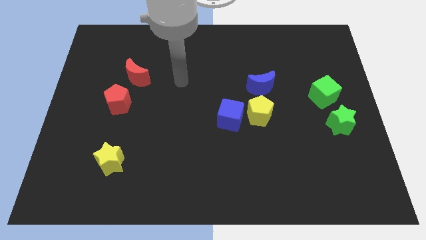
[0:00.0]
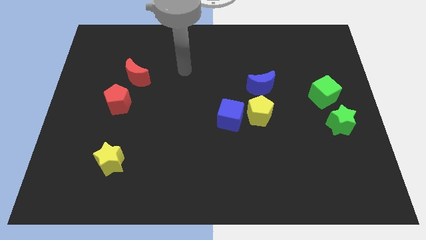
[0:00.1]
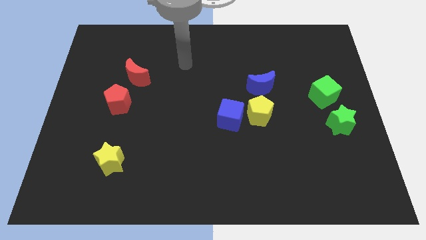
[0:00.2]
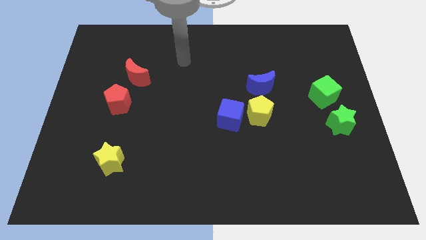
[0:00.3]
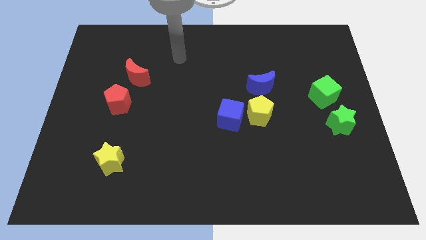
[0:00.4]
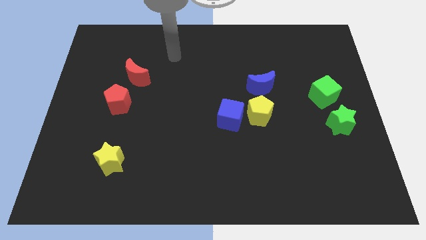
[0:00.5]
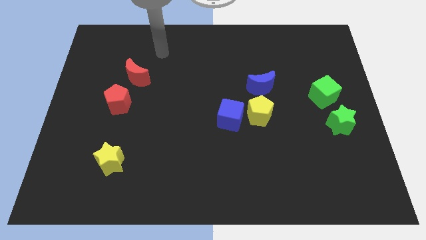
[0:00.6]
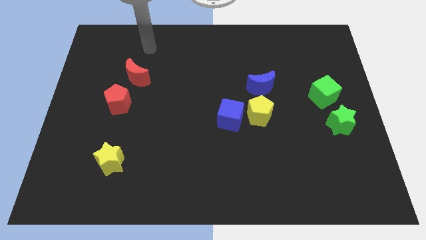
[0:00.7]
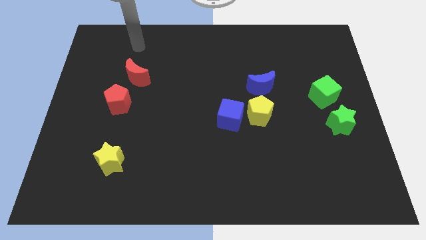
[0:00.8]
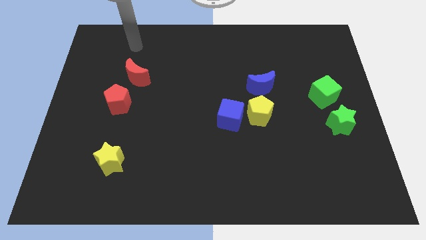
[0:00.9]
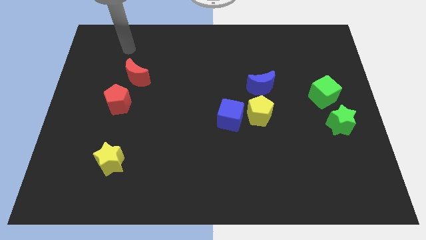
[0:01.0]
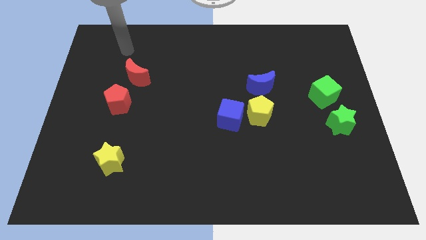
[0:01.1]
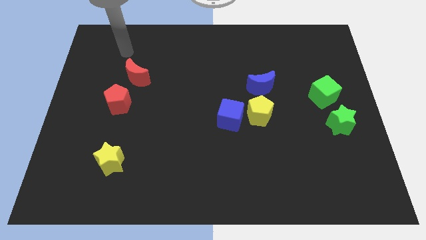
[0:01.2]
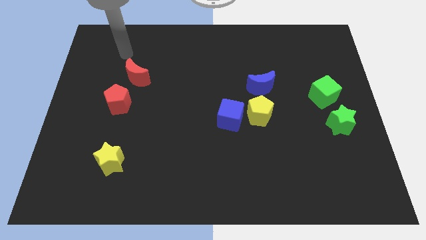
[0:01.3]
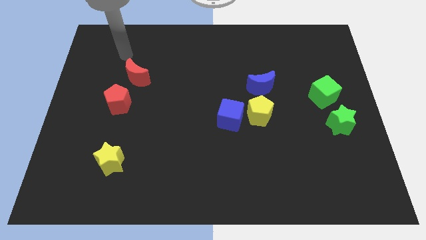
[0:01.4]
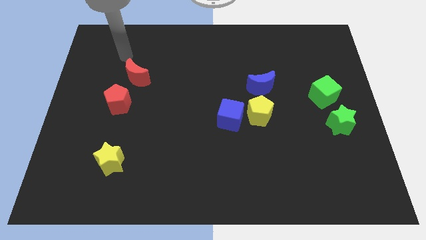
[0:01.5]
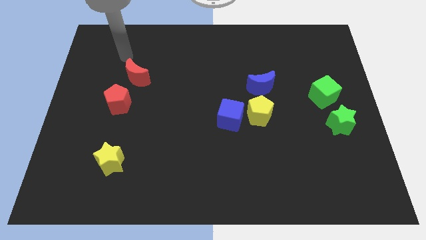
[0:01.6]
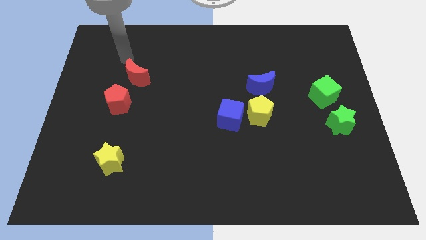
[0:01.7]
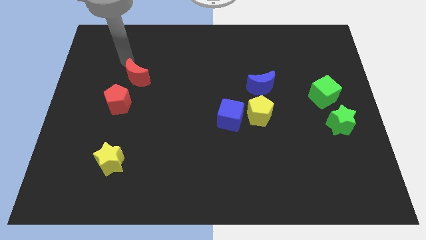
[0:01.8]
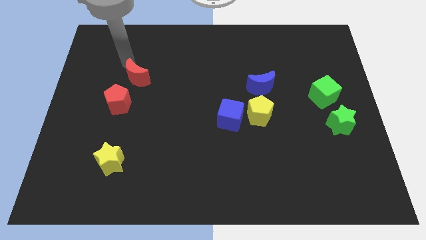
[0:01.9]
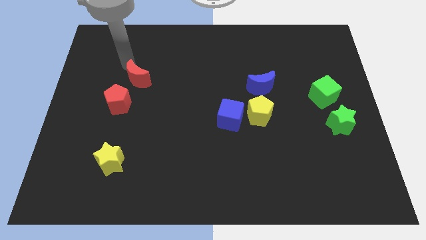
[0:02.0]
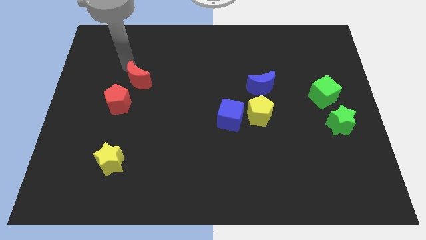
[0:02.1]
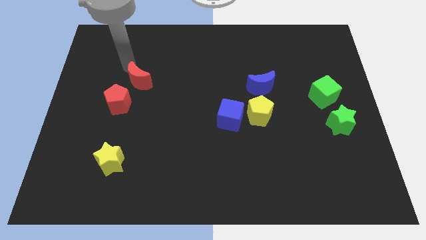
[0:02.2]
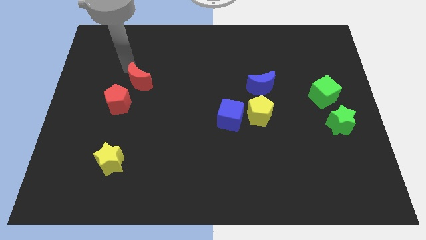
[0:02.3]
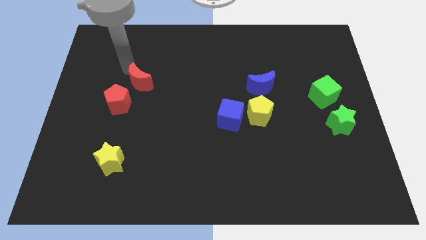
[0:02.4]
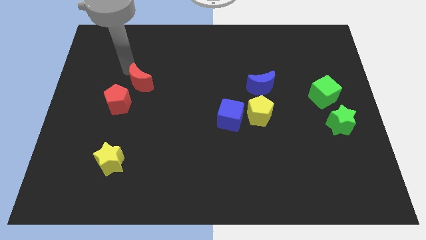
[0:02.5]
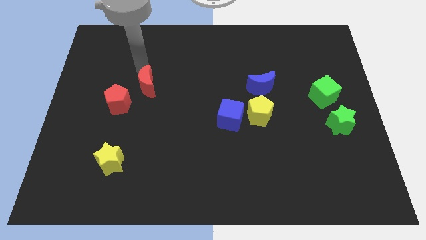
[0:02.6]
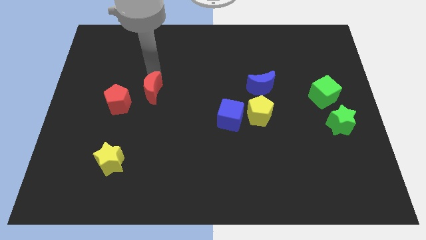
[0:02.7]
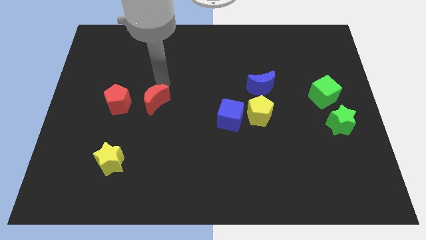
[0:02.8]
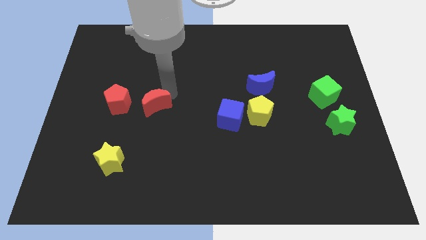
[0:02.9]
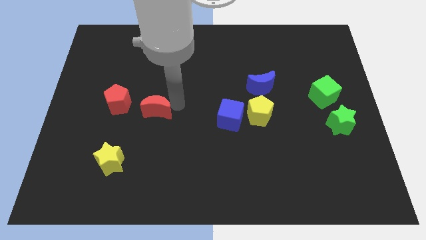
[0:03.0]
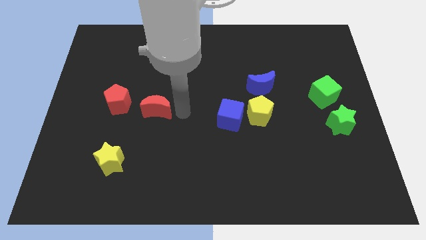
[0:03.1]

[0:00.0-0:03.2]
place the red moon to the right side of the red pentagon

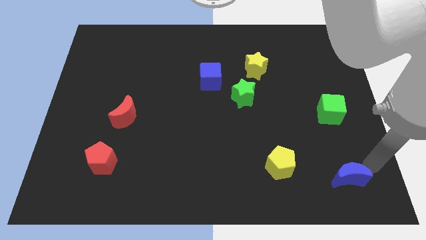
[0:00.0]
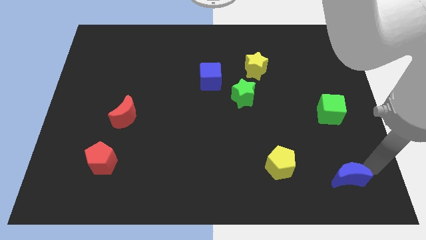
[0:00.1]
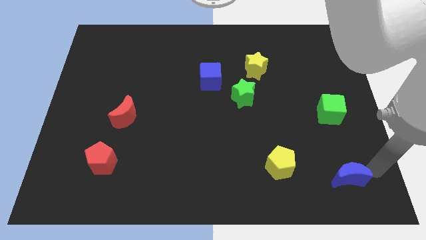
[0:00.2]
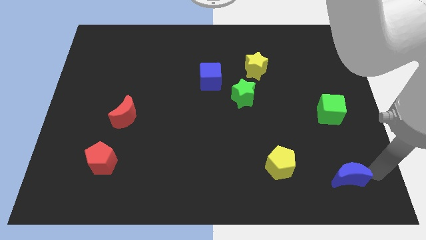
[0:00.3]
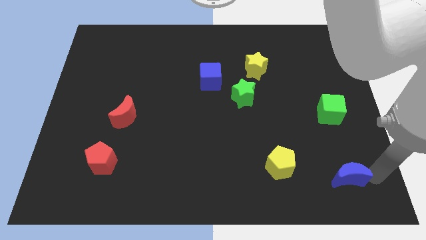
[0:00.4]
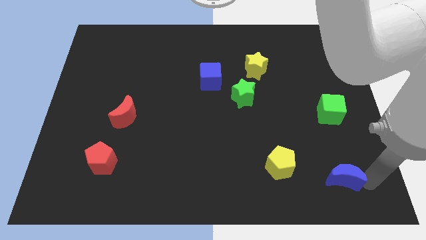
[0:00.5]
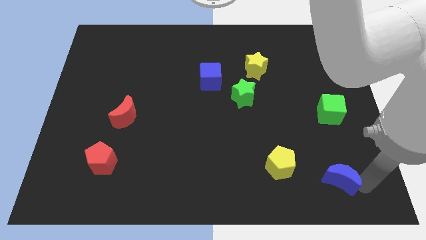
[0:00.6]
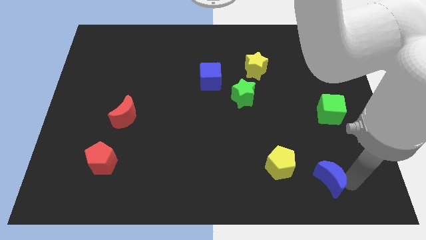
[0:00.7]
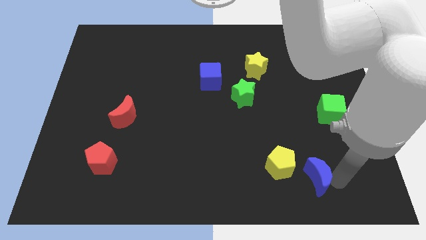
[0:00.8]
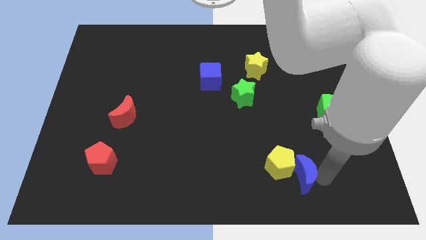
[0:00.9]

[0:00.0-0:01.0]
make the blue moon touch the right side of the yellow pentagon

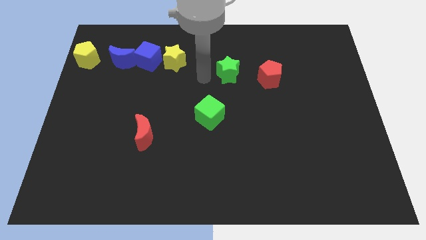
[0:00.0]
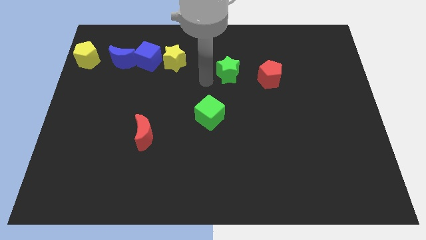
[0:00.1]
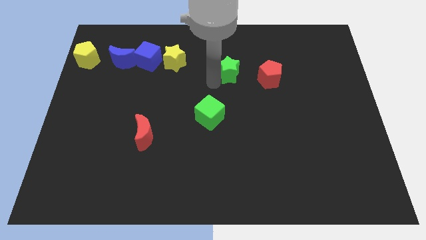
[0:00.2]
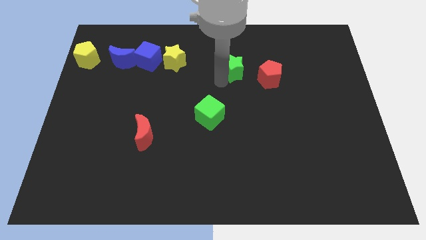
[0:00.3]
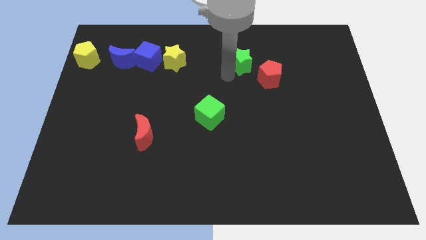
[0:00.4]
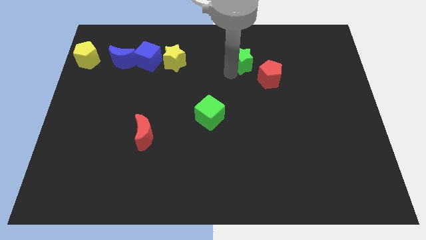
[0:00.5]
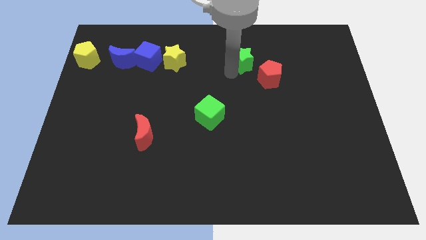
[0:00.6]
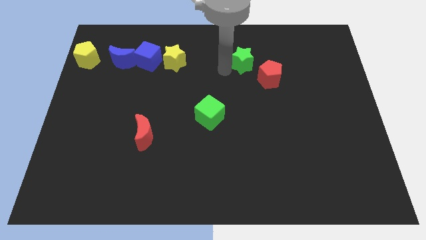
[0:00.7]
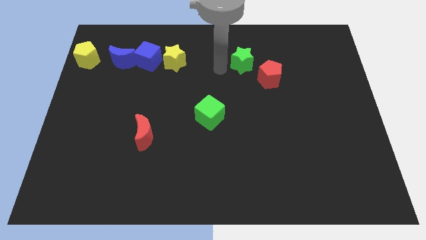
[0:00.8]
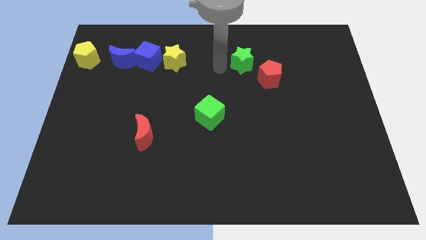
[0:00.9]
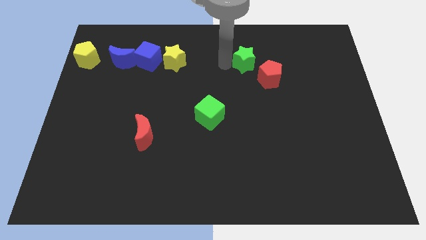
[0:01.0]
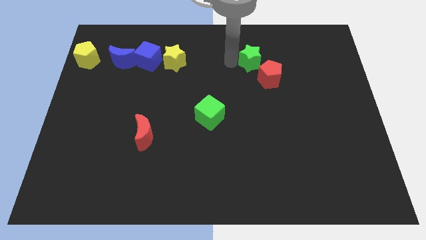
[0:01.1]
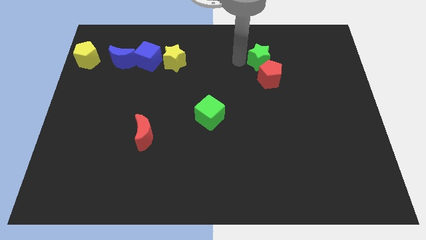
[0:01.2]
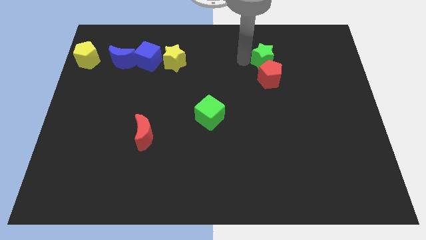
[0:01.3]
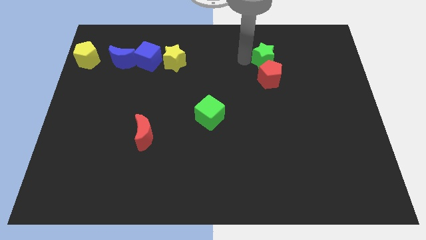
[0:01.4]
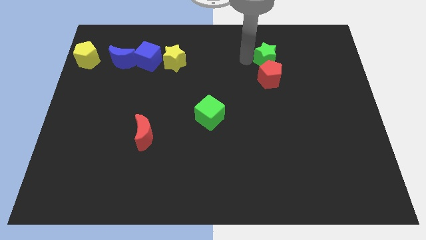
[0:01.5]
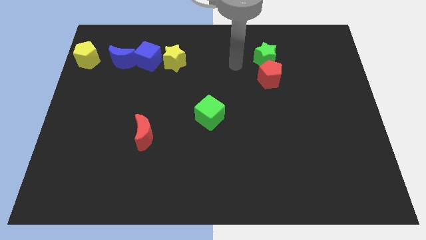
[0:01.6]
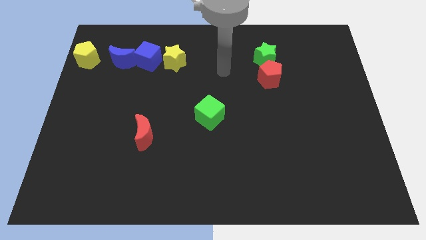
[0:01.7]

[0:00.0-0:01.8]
place the green star above the red pentagon

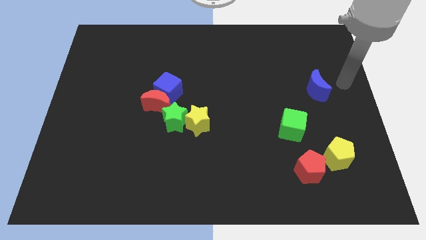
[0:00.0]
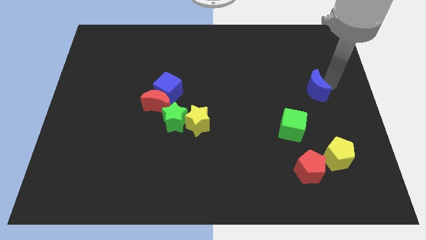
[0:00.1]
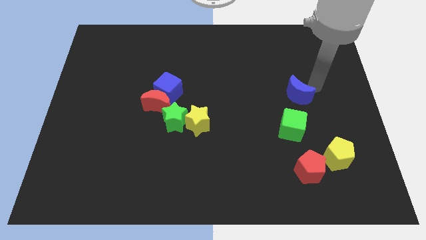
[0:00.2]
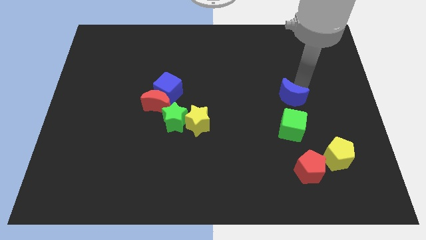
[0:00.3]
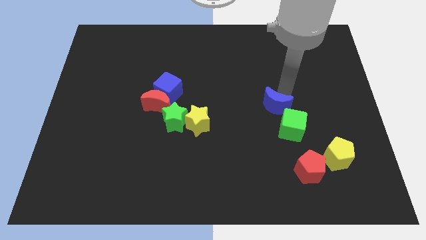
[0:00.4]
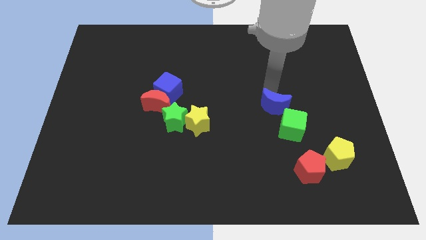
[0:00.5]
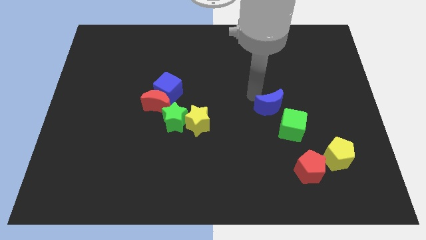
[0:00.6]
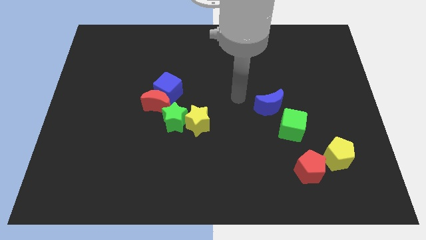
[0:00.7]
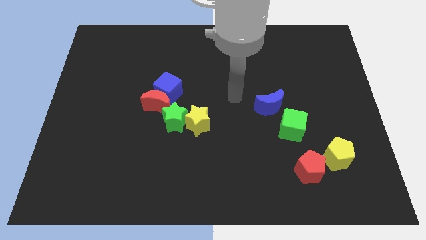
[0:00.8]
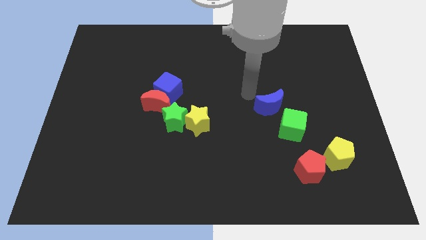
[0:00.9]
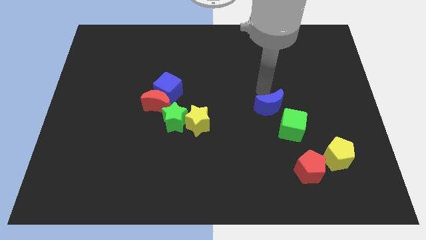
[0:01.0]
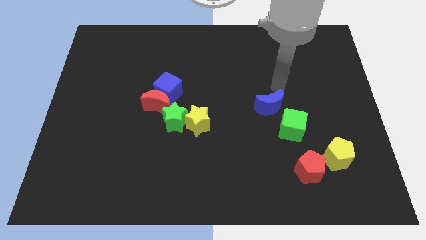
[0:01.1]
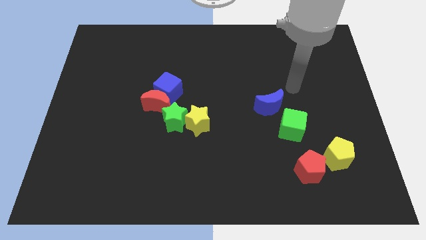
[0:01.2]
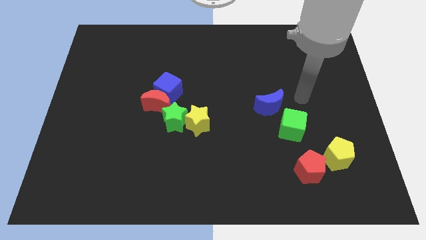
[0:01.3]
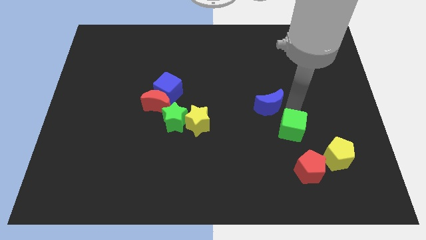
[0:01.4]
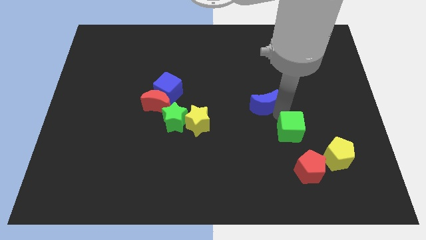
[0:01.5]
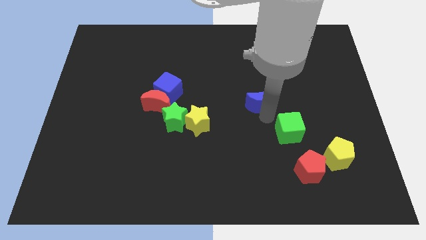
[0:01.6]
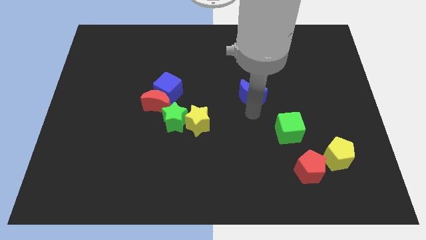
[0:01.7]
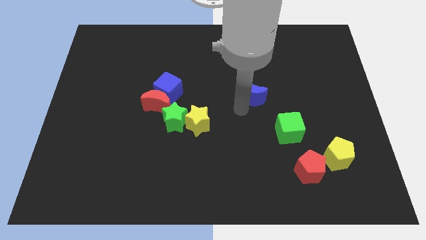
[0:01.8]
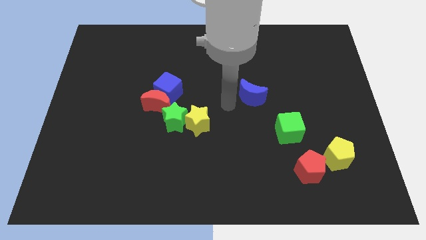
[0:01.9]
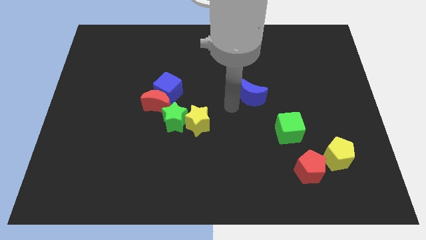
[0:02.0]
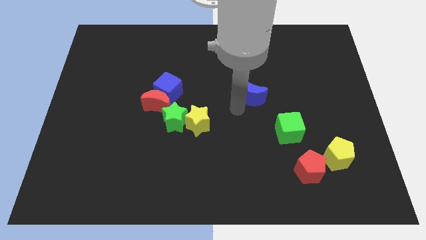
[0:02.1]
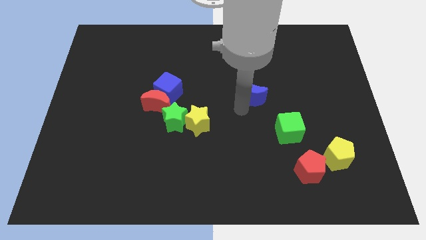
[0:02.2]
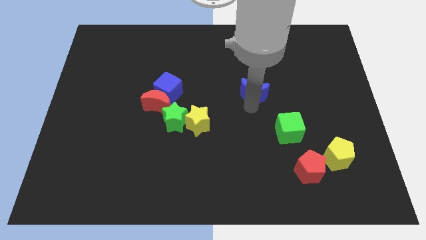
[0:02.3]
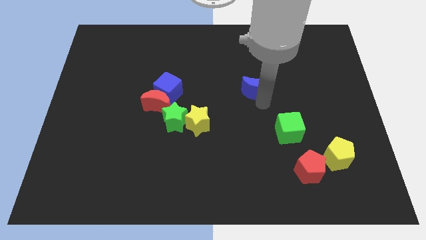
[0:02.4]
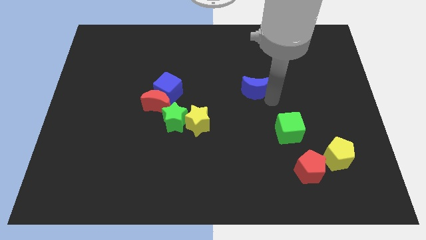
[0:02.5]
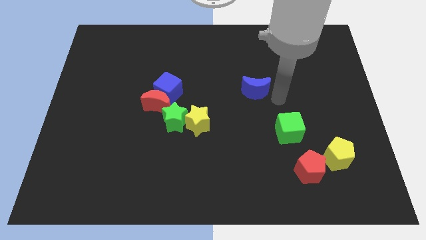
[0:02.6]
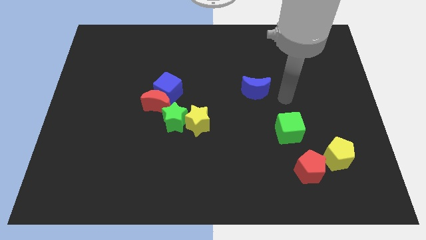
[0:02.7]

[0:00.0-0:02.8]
push the blue crescent to the right of the blue cube
